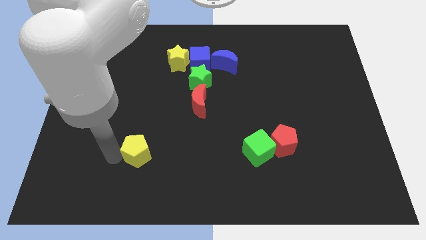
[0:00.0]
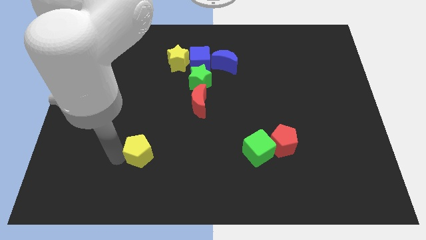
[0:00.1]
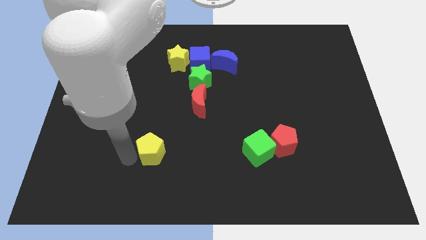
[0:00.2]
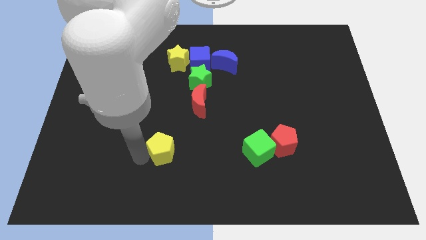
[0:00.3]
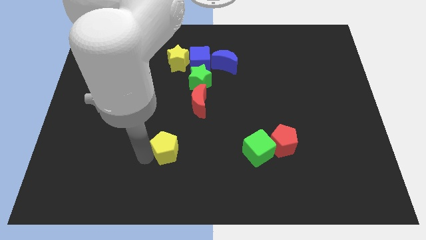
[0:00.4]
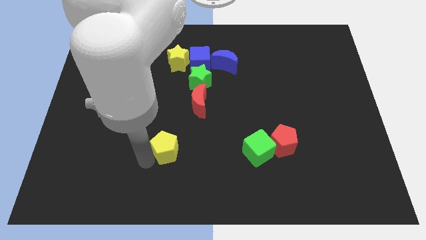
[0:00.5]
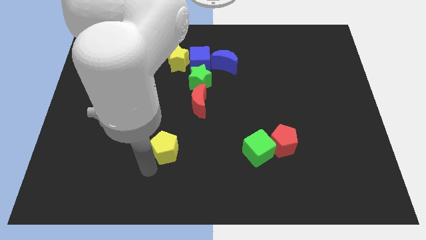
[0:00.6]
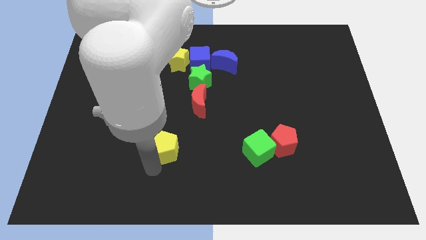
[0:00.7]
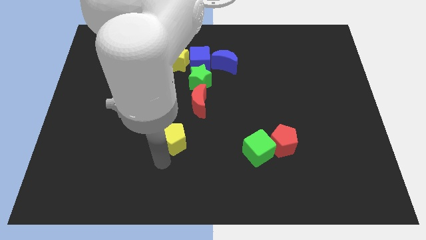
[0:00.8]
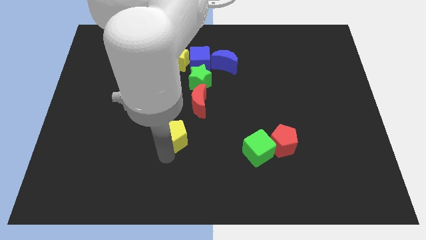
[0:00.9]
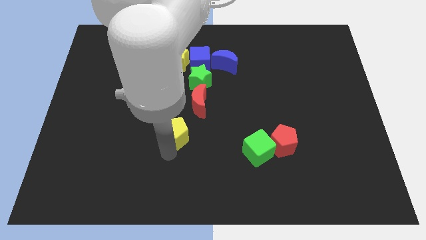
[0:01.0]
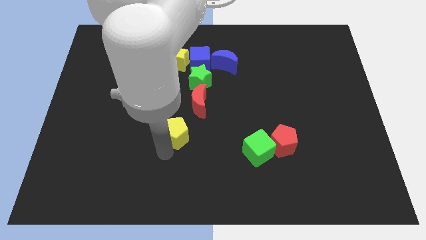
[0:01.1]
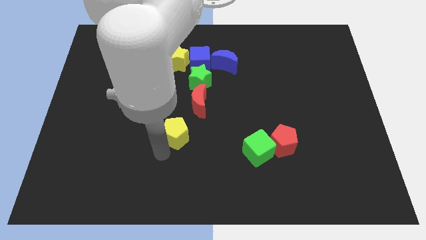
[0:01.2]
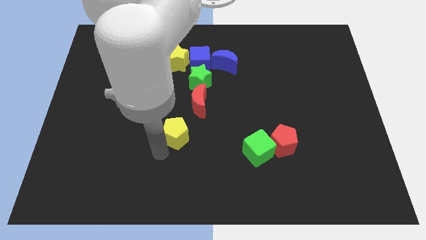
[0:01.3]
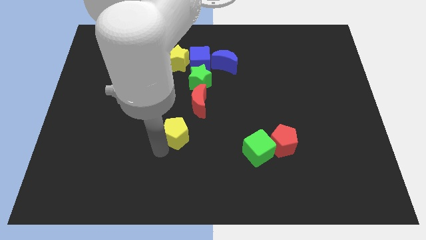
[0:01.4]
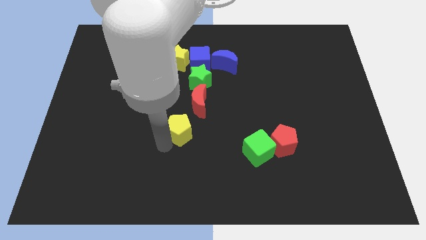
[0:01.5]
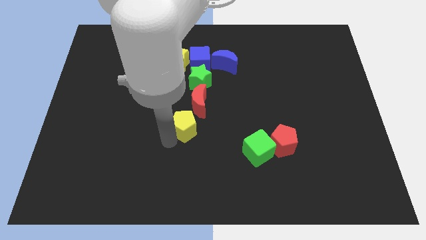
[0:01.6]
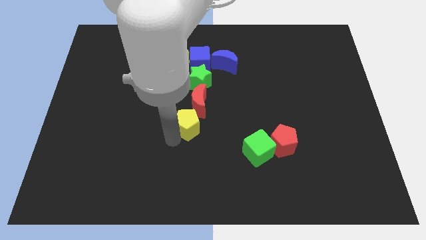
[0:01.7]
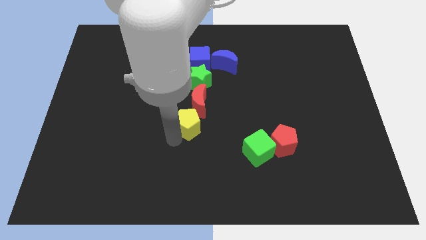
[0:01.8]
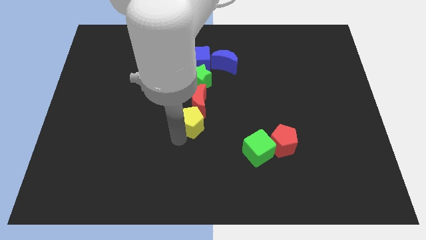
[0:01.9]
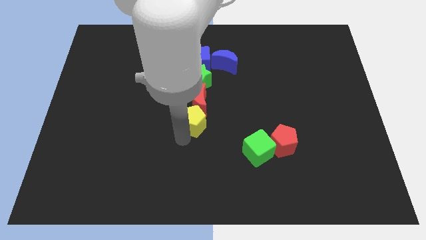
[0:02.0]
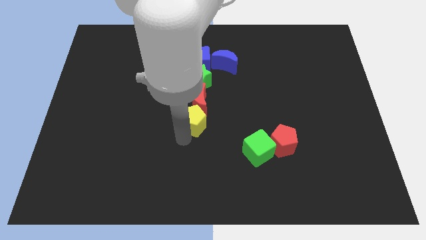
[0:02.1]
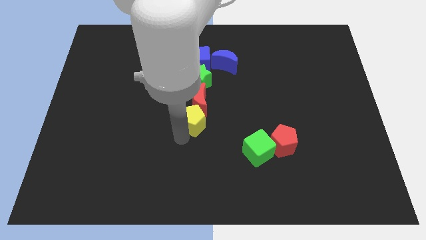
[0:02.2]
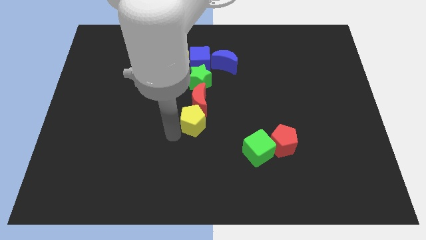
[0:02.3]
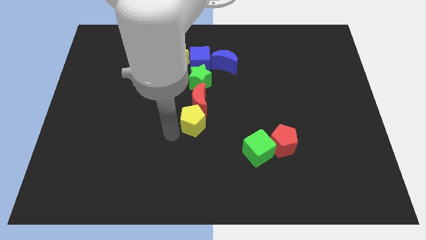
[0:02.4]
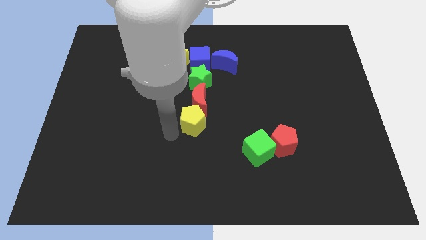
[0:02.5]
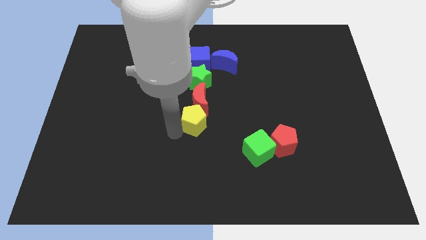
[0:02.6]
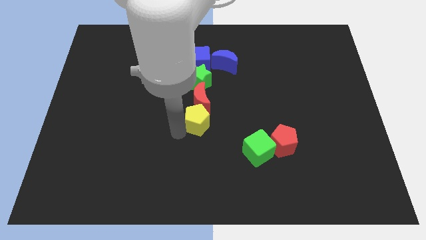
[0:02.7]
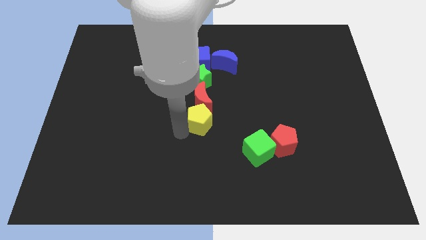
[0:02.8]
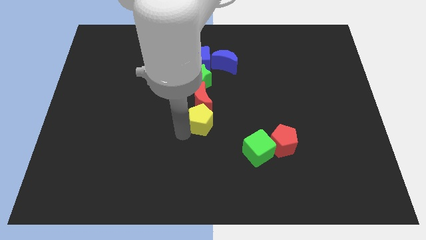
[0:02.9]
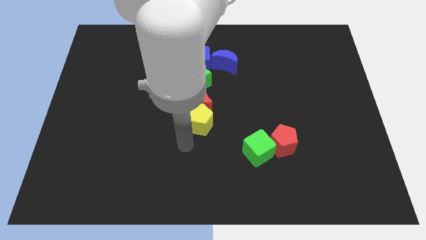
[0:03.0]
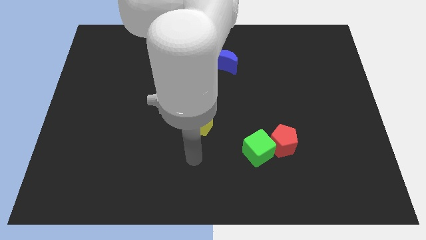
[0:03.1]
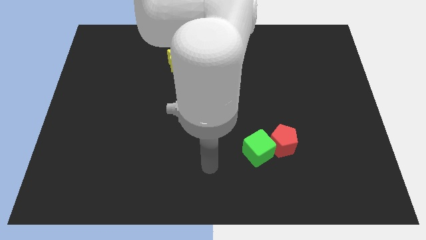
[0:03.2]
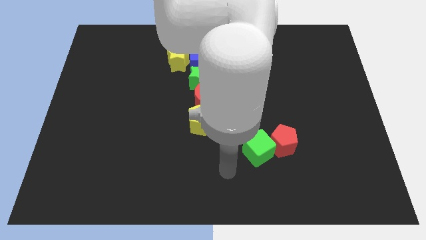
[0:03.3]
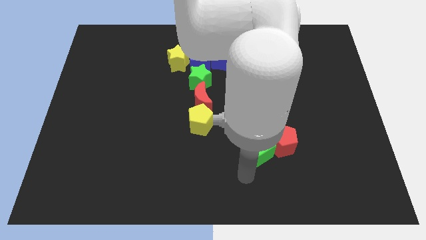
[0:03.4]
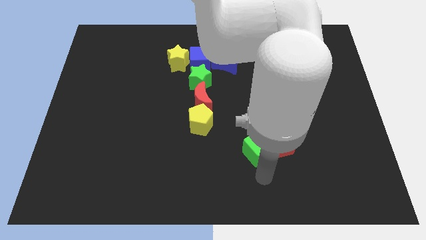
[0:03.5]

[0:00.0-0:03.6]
move the yellow pentagon below the red moon

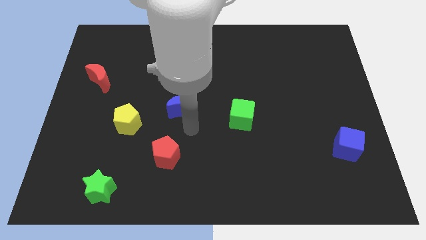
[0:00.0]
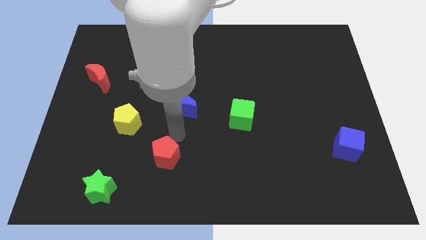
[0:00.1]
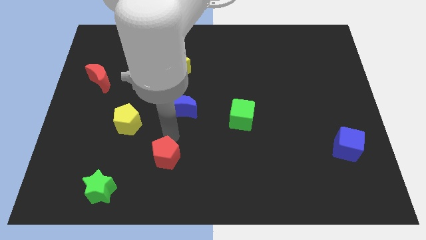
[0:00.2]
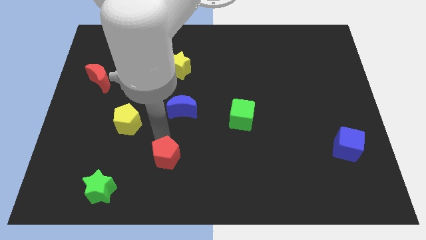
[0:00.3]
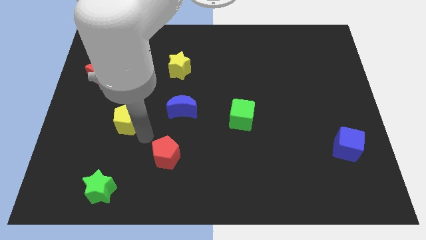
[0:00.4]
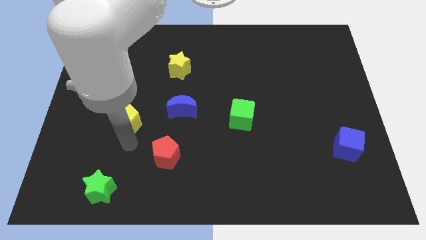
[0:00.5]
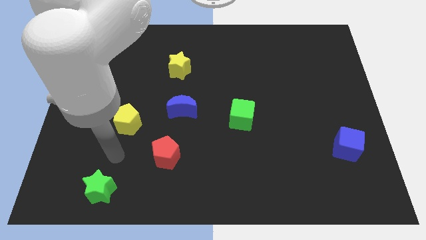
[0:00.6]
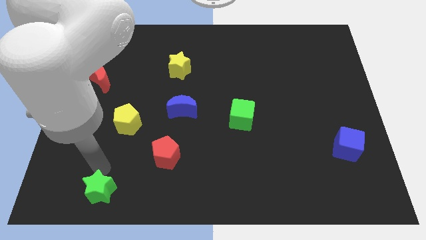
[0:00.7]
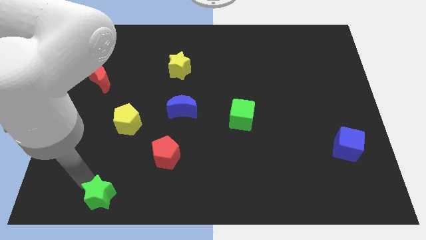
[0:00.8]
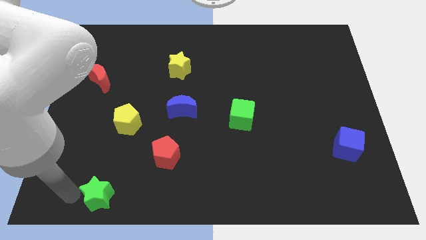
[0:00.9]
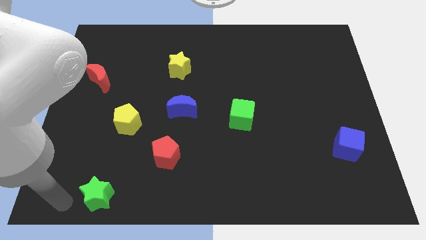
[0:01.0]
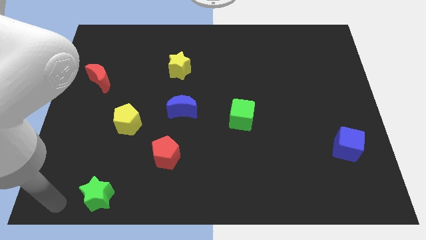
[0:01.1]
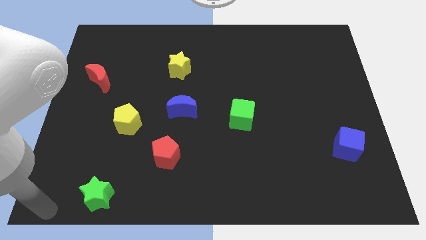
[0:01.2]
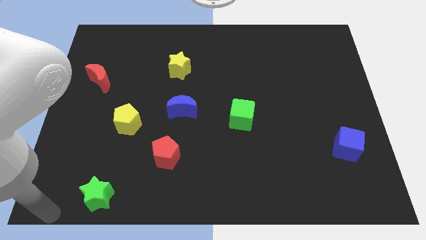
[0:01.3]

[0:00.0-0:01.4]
move the arm to the bottom left

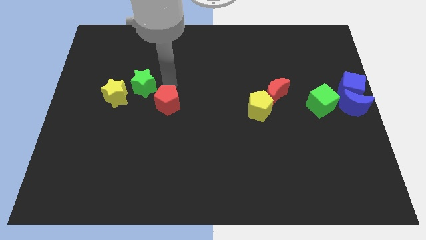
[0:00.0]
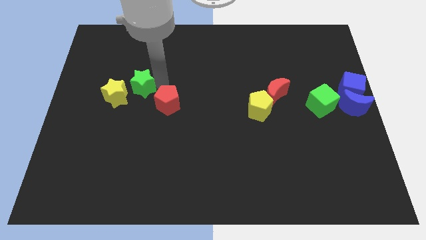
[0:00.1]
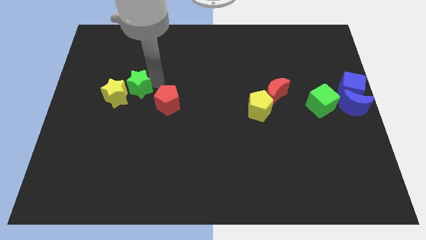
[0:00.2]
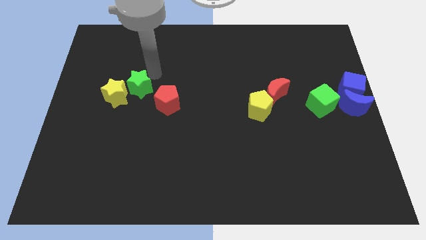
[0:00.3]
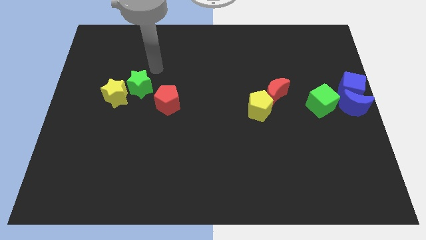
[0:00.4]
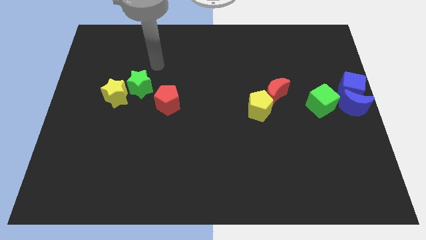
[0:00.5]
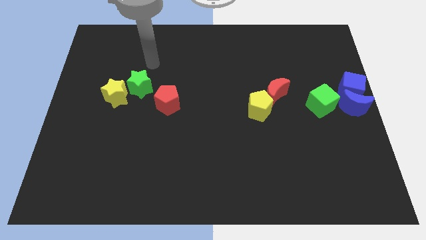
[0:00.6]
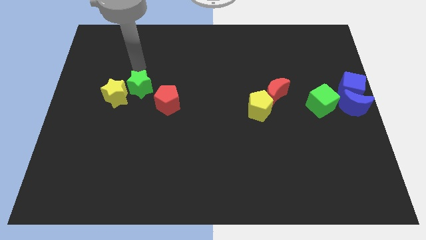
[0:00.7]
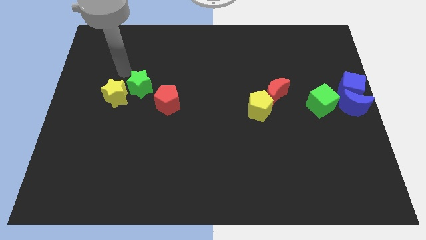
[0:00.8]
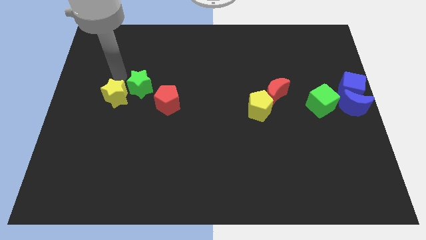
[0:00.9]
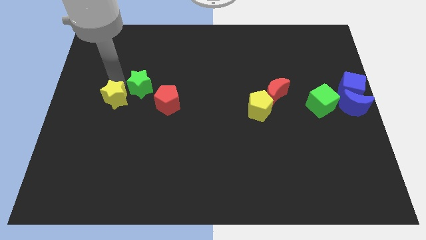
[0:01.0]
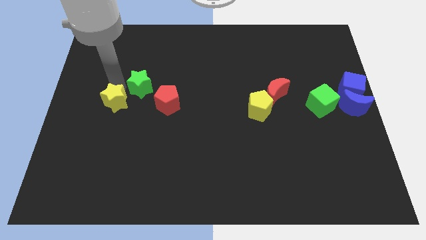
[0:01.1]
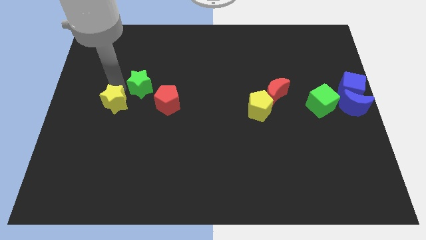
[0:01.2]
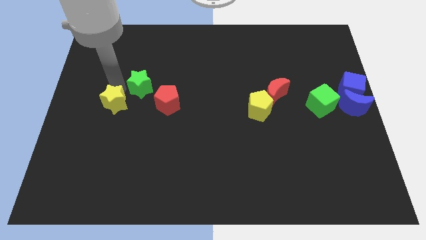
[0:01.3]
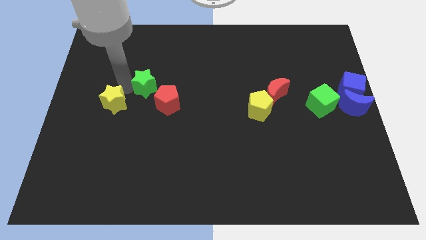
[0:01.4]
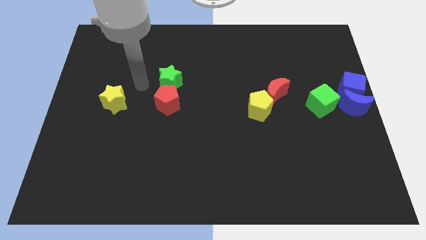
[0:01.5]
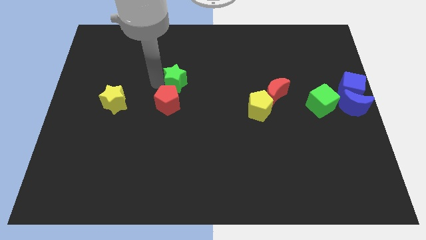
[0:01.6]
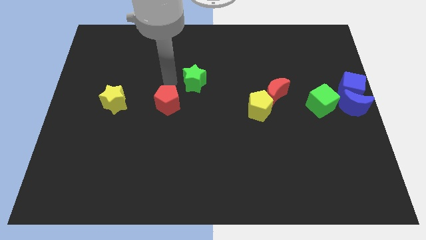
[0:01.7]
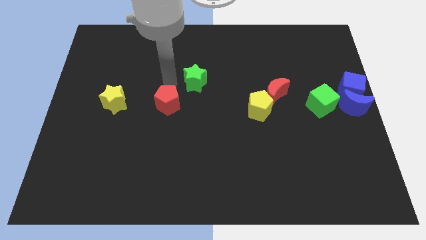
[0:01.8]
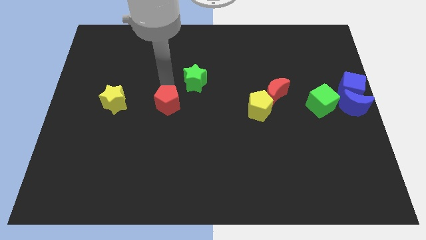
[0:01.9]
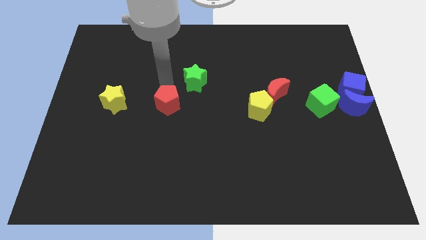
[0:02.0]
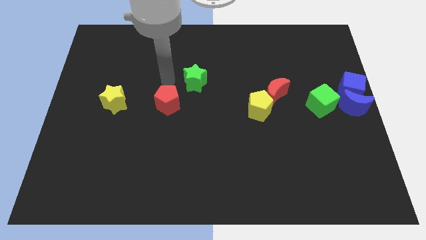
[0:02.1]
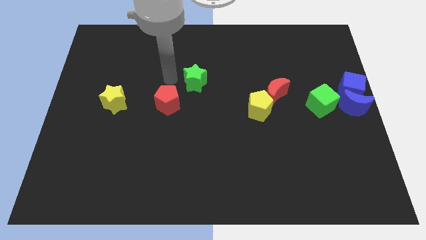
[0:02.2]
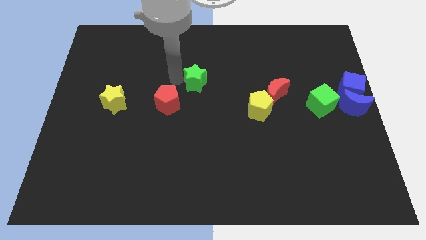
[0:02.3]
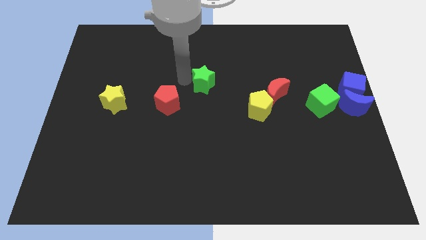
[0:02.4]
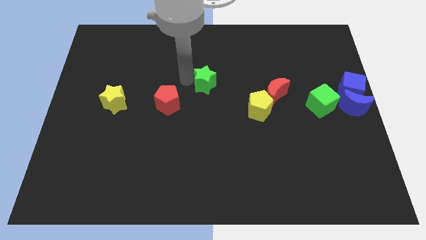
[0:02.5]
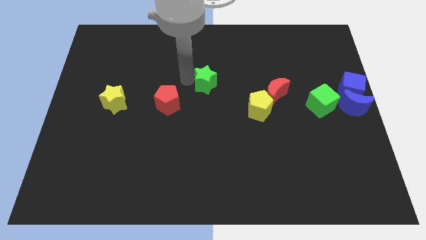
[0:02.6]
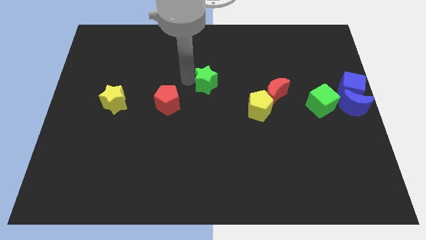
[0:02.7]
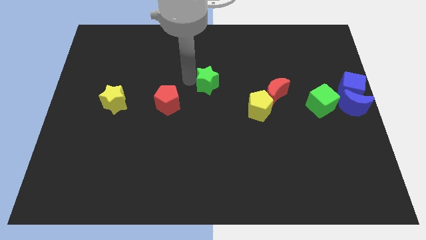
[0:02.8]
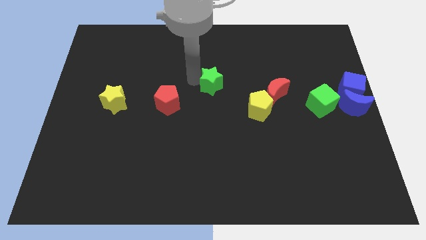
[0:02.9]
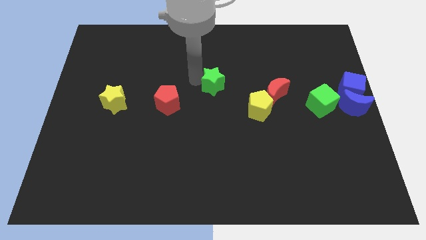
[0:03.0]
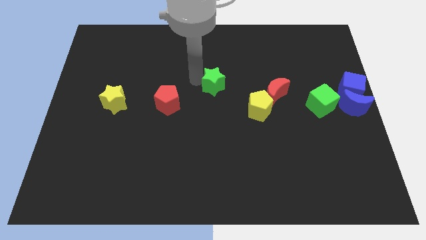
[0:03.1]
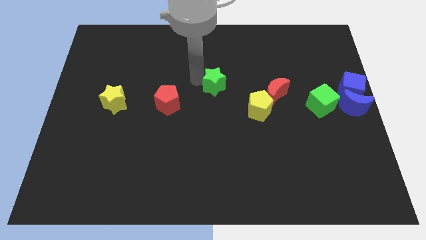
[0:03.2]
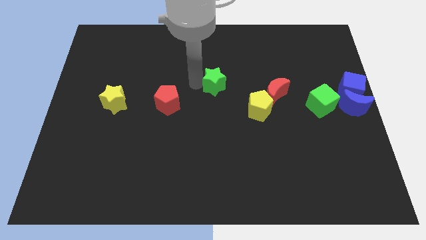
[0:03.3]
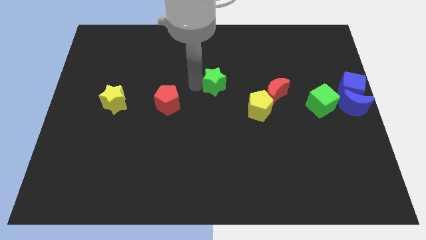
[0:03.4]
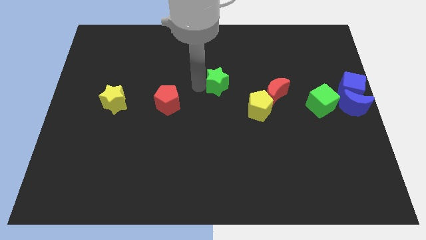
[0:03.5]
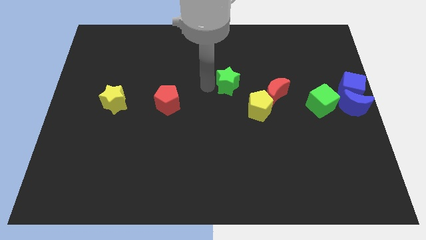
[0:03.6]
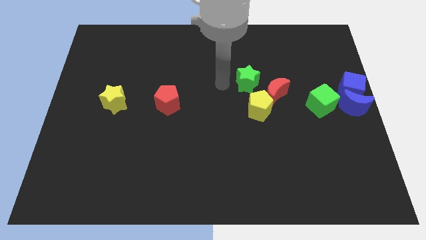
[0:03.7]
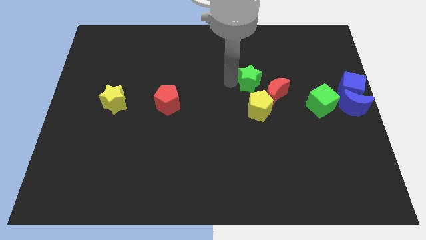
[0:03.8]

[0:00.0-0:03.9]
separate the green star from the yellow star

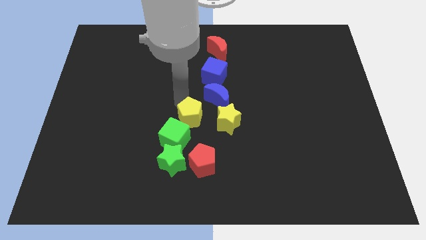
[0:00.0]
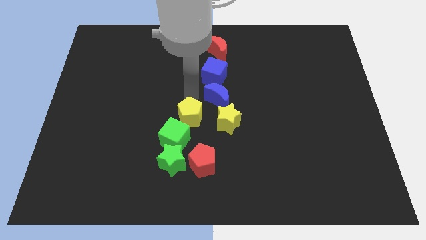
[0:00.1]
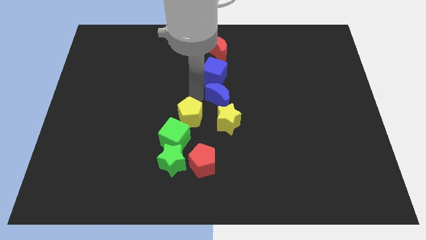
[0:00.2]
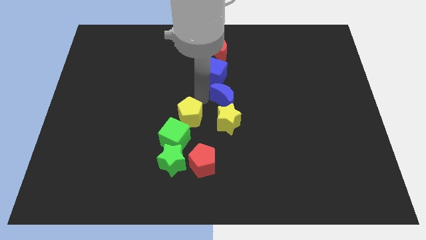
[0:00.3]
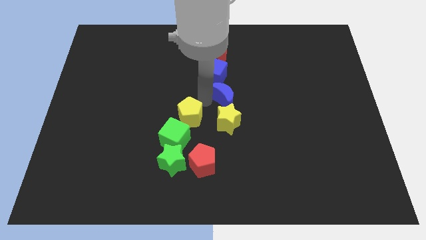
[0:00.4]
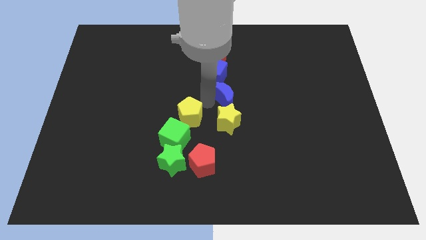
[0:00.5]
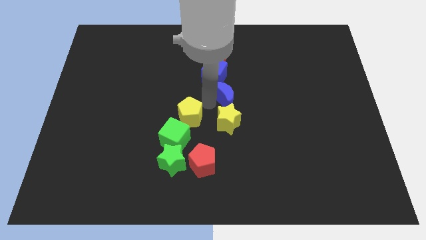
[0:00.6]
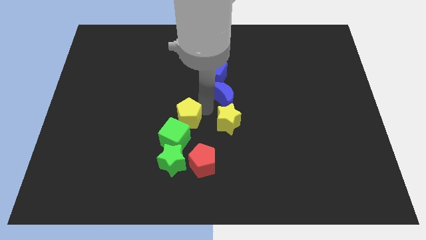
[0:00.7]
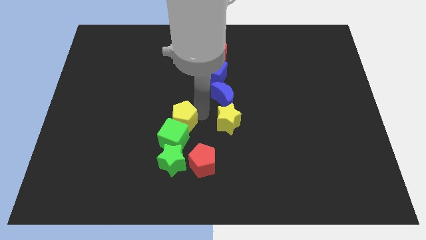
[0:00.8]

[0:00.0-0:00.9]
slightly touch the left side of the blue moon
